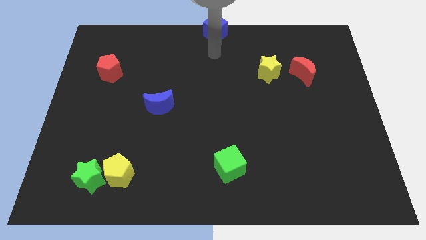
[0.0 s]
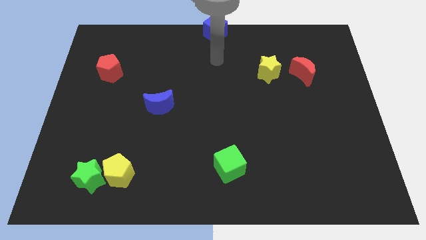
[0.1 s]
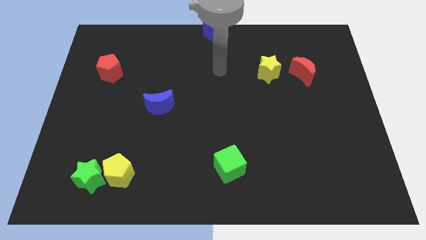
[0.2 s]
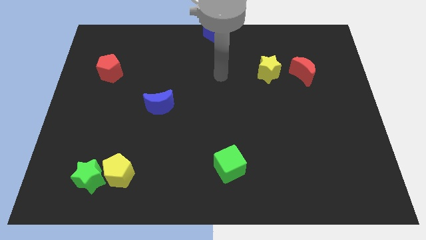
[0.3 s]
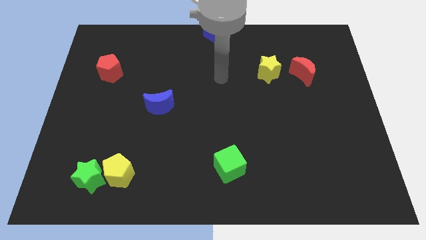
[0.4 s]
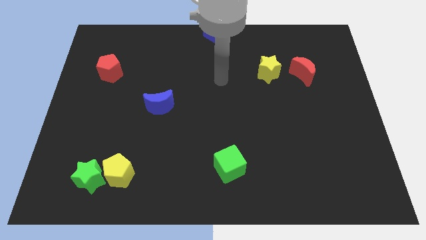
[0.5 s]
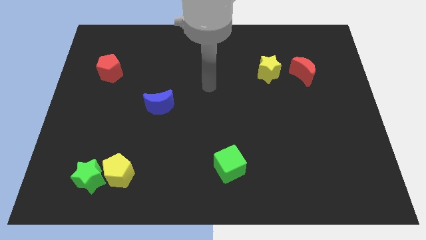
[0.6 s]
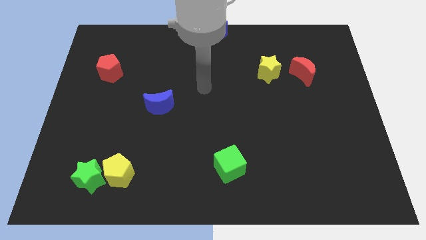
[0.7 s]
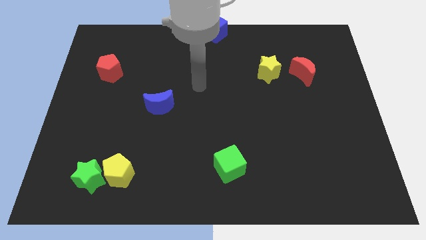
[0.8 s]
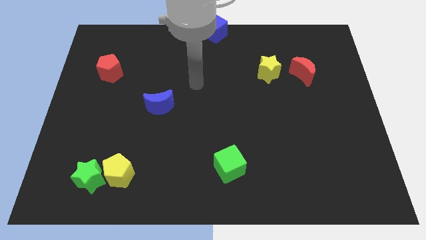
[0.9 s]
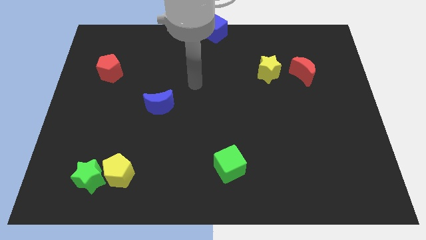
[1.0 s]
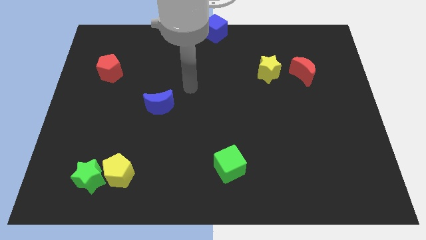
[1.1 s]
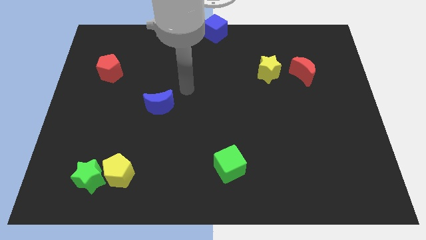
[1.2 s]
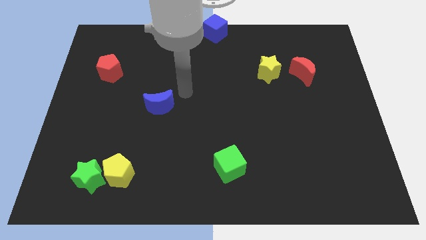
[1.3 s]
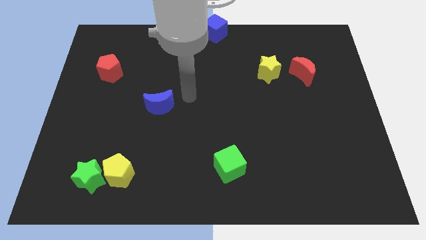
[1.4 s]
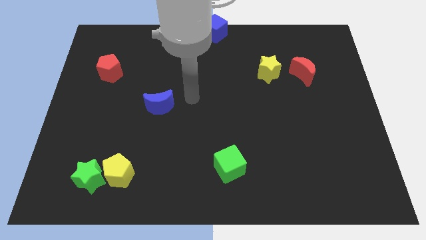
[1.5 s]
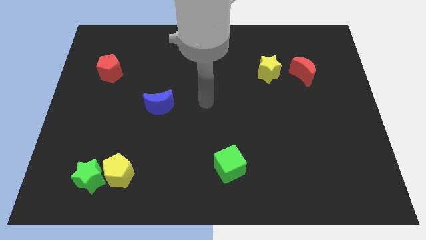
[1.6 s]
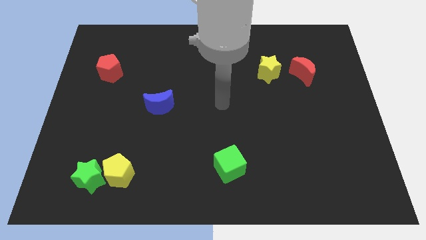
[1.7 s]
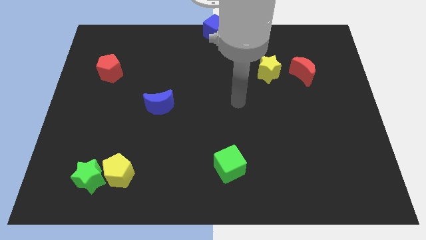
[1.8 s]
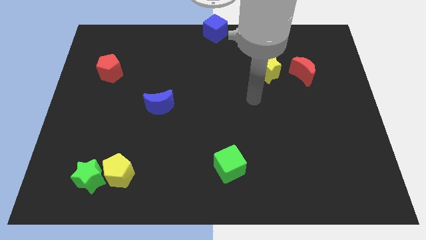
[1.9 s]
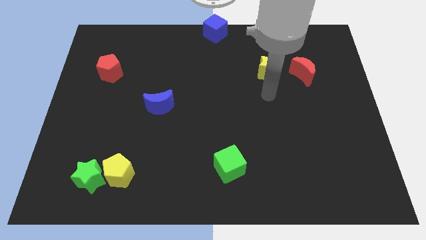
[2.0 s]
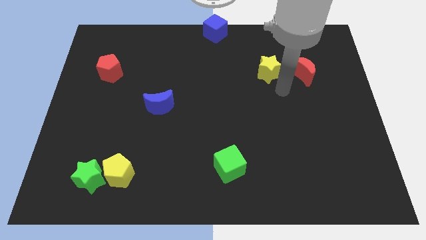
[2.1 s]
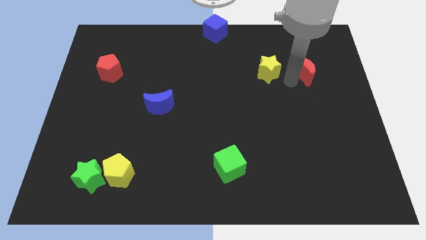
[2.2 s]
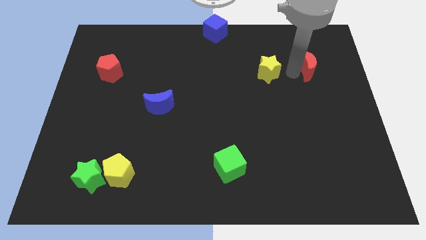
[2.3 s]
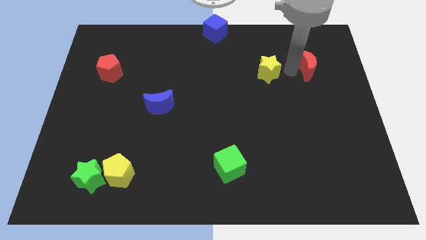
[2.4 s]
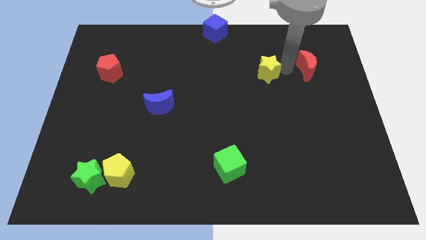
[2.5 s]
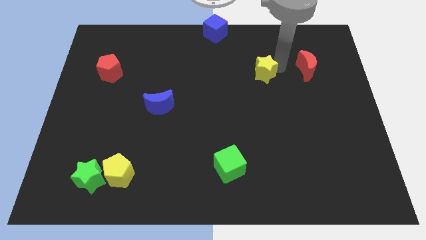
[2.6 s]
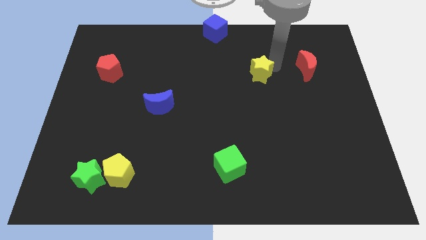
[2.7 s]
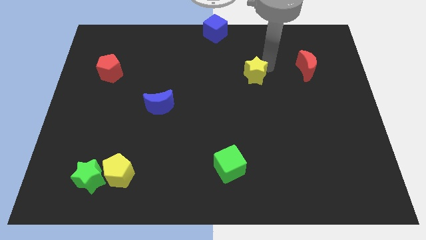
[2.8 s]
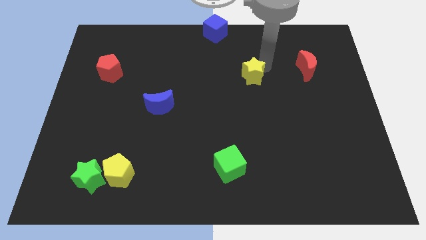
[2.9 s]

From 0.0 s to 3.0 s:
separate the yellow star and the red crescent

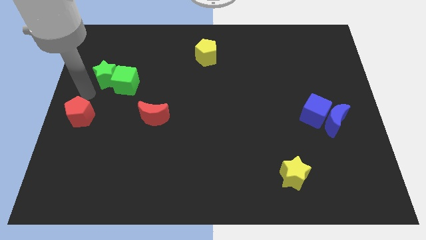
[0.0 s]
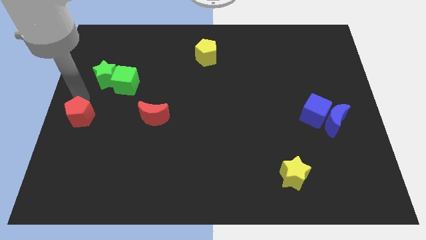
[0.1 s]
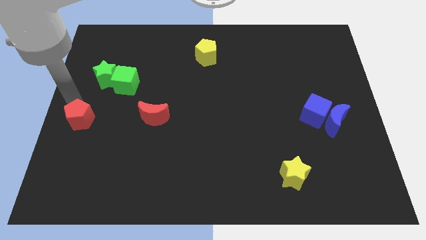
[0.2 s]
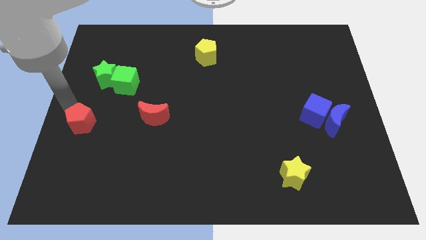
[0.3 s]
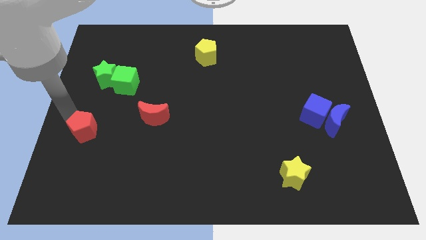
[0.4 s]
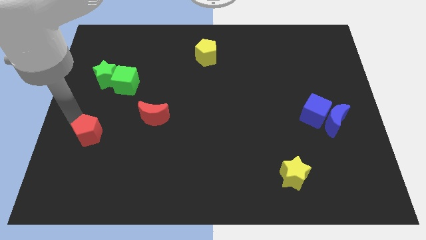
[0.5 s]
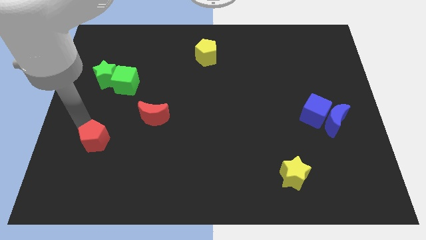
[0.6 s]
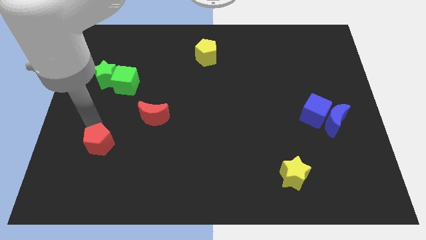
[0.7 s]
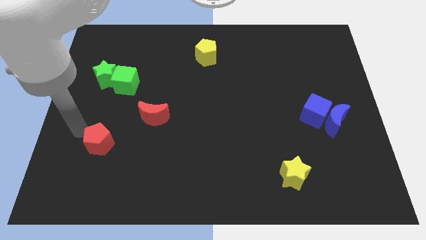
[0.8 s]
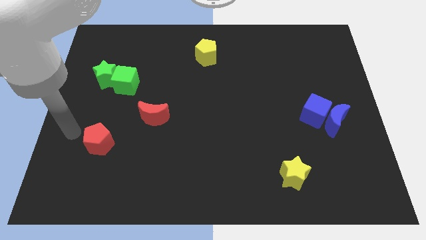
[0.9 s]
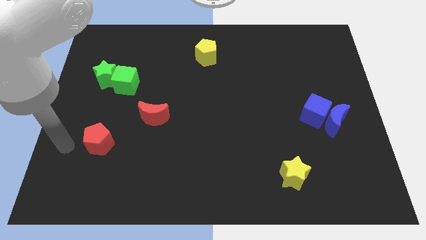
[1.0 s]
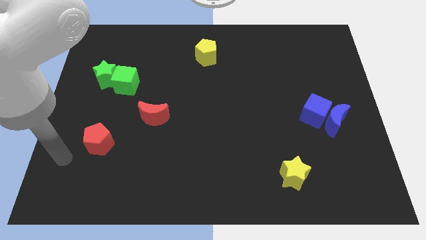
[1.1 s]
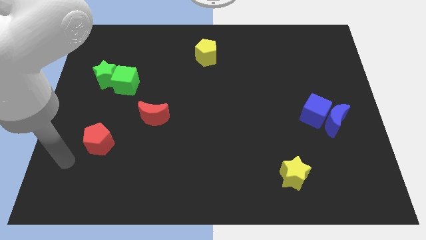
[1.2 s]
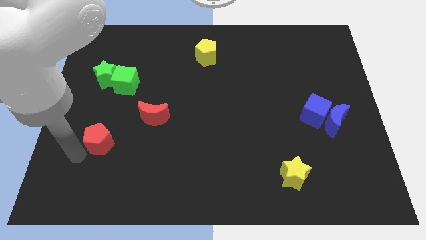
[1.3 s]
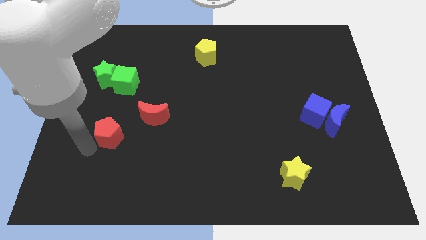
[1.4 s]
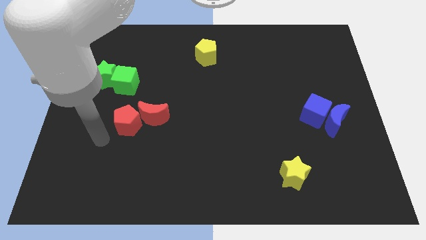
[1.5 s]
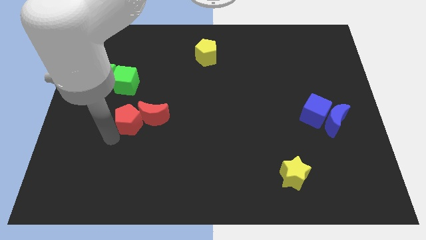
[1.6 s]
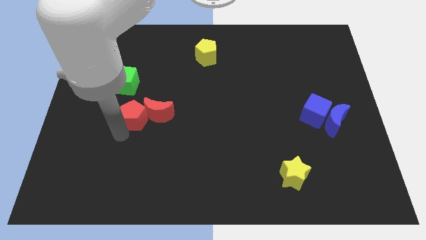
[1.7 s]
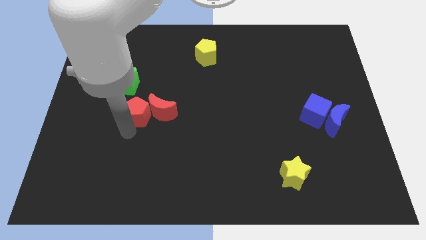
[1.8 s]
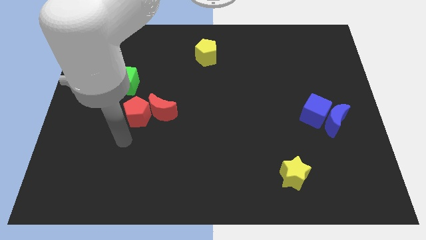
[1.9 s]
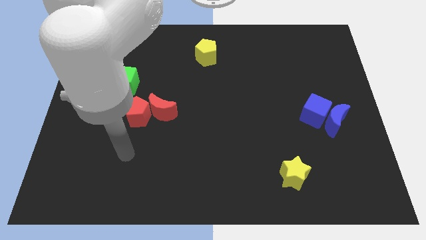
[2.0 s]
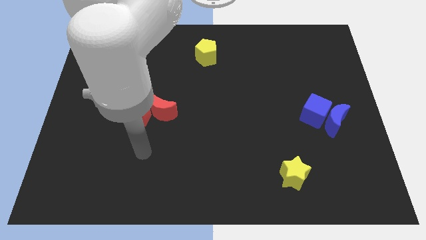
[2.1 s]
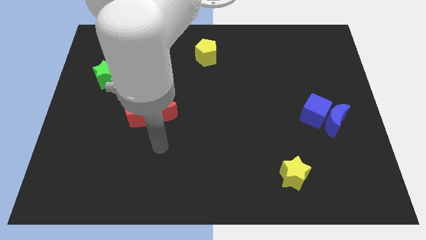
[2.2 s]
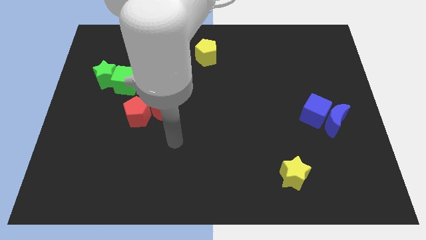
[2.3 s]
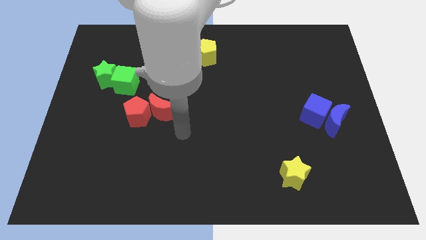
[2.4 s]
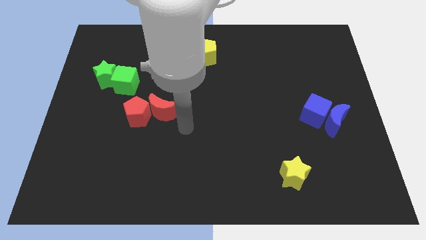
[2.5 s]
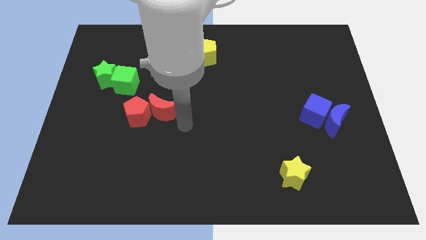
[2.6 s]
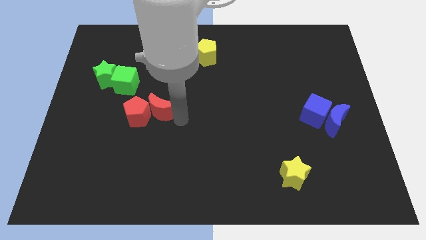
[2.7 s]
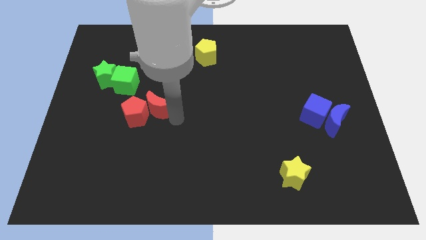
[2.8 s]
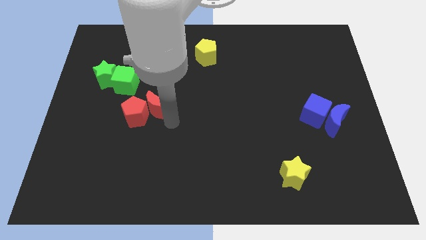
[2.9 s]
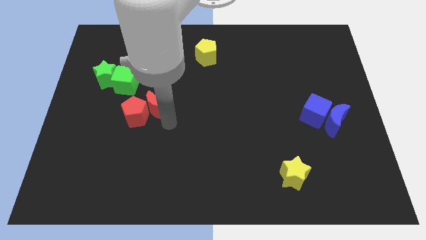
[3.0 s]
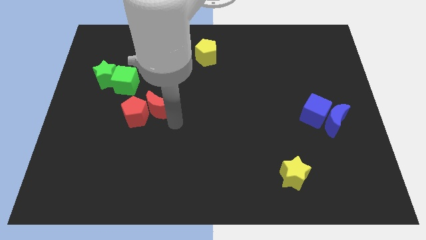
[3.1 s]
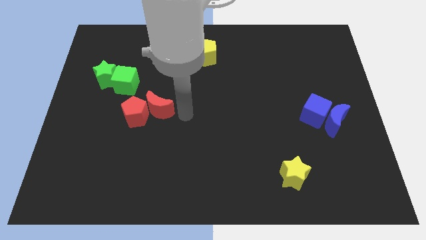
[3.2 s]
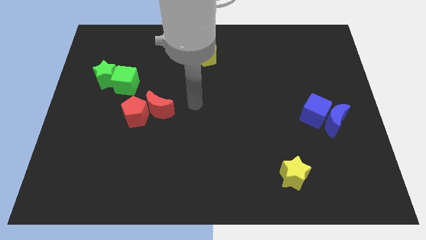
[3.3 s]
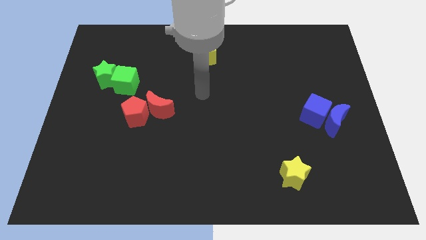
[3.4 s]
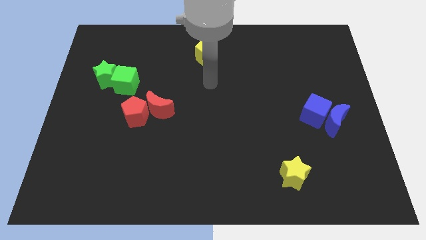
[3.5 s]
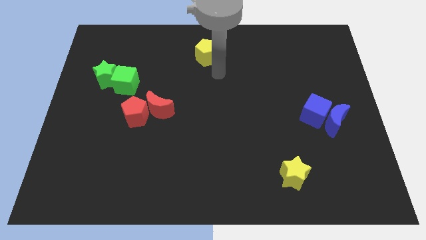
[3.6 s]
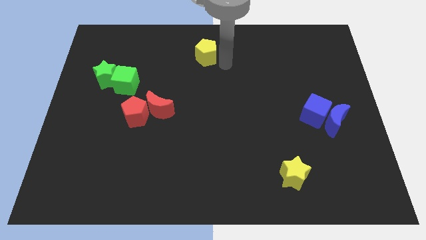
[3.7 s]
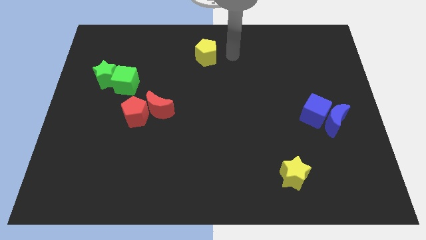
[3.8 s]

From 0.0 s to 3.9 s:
push the red pentagon into red moon diagonal left bottom

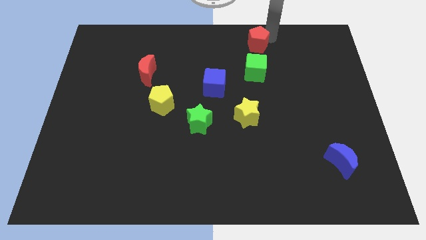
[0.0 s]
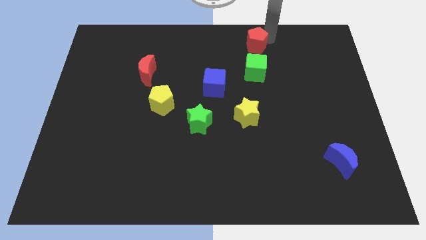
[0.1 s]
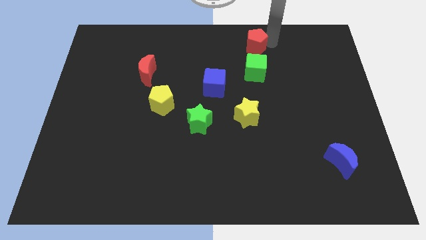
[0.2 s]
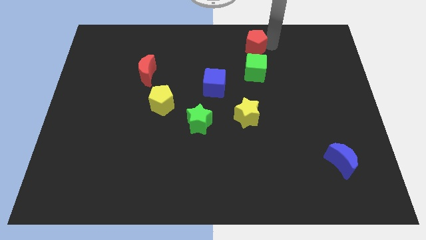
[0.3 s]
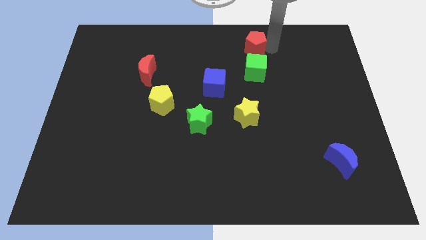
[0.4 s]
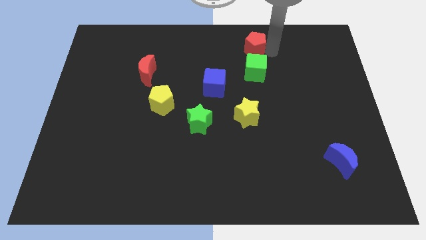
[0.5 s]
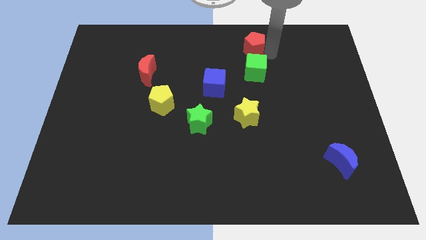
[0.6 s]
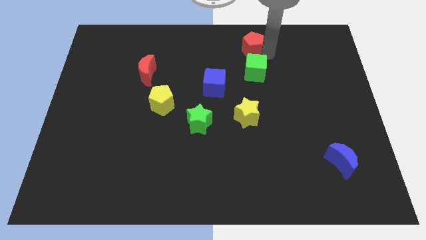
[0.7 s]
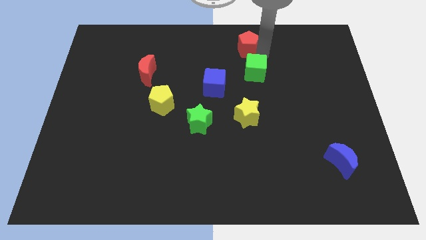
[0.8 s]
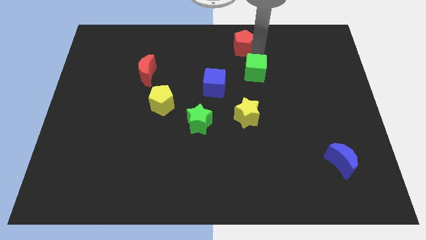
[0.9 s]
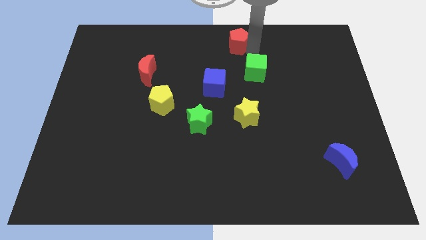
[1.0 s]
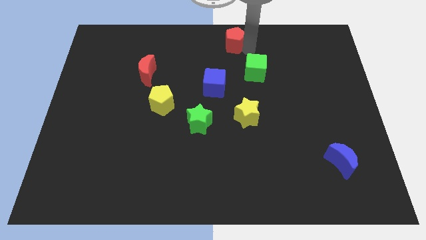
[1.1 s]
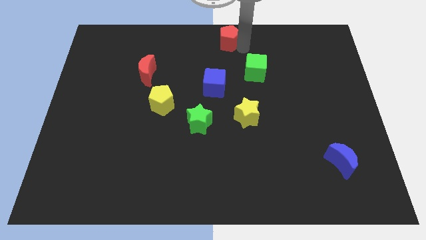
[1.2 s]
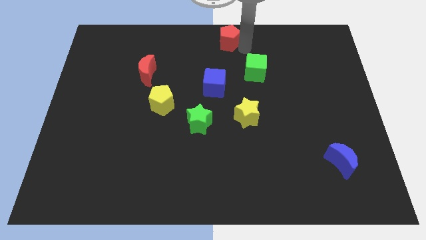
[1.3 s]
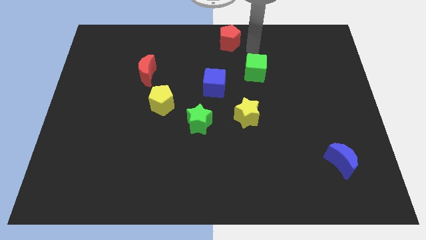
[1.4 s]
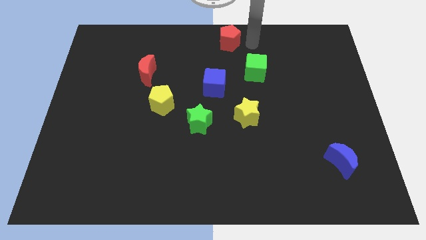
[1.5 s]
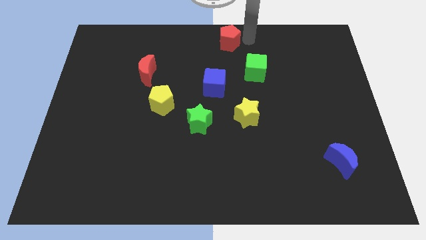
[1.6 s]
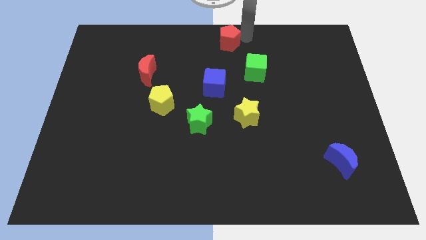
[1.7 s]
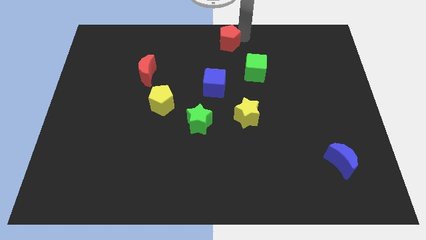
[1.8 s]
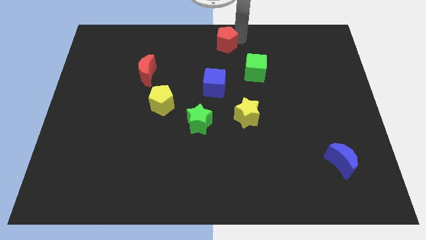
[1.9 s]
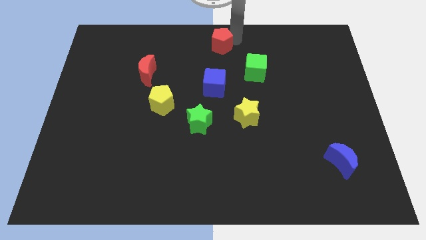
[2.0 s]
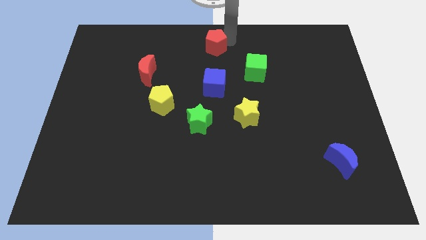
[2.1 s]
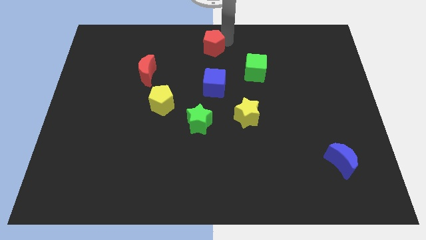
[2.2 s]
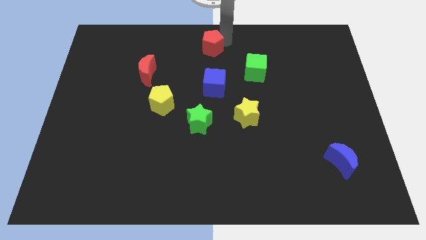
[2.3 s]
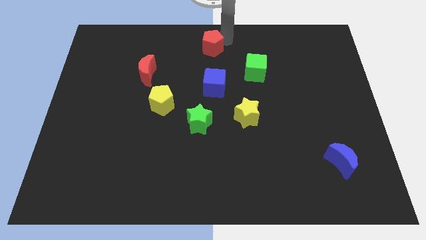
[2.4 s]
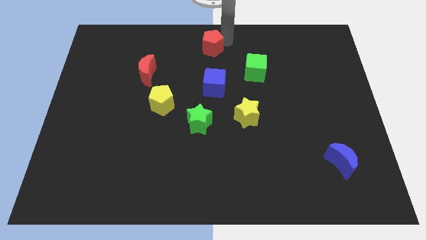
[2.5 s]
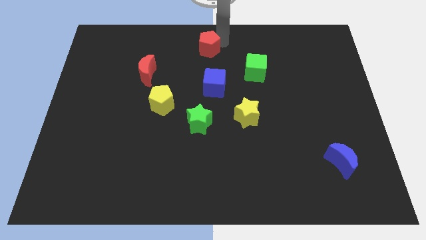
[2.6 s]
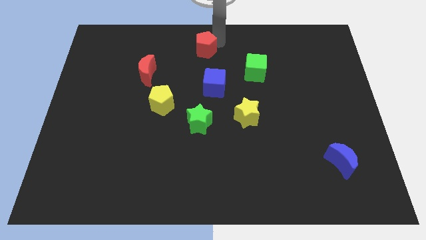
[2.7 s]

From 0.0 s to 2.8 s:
place the red pentagon at the top center of the board
